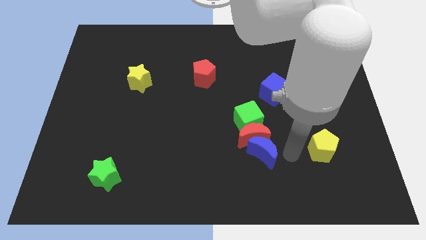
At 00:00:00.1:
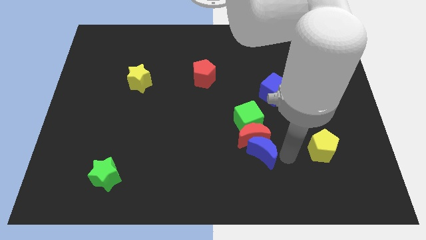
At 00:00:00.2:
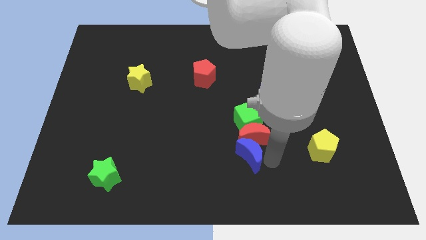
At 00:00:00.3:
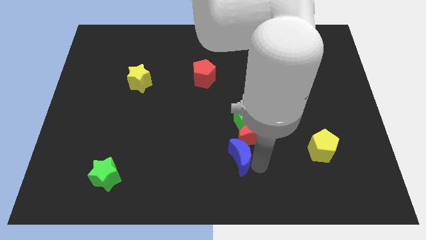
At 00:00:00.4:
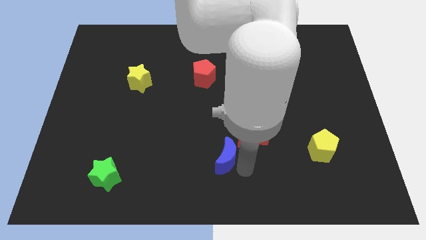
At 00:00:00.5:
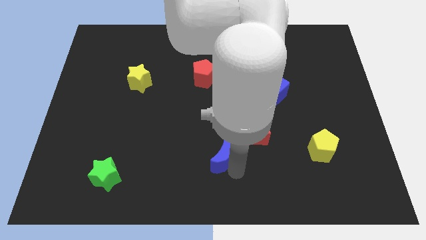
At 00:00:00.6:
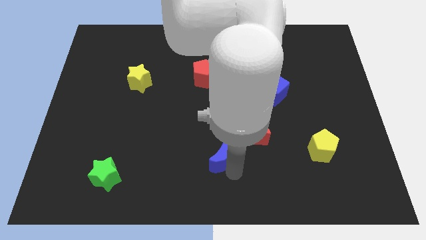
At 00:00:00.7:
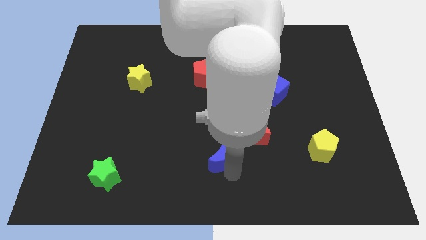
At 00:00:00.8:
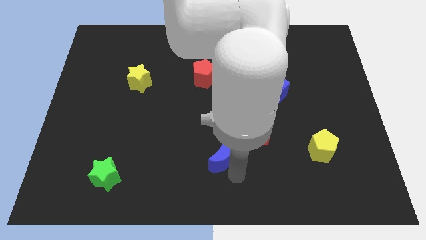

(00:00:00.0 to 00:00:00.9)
push blue crescent slightly to the left

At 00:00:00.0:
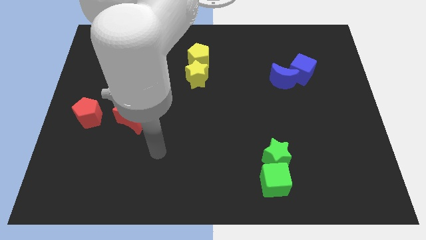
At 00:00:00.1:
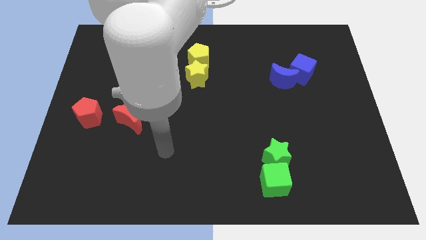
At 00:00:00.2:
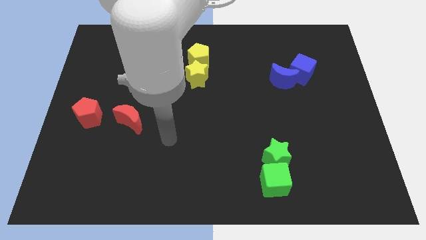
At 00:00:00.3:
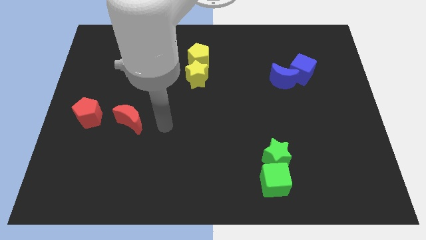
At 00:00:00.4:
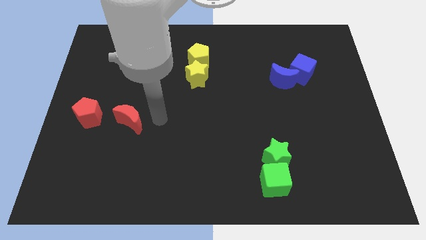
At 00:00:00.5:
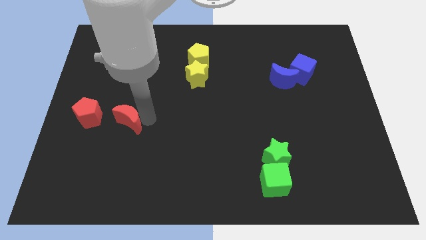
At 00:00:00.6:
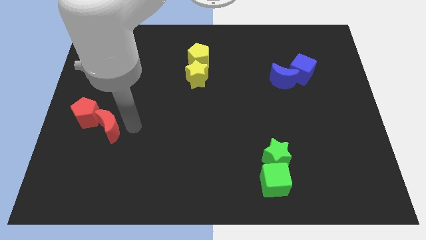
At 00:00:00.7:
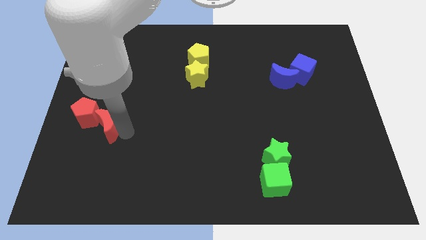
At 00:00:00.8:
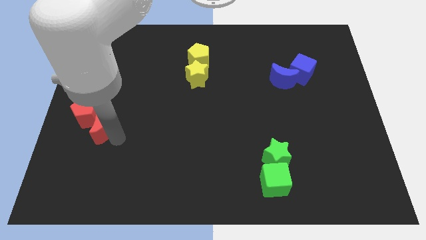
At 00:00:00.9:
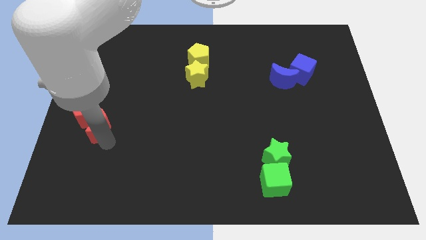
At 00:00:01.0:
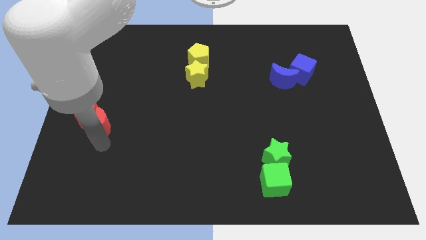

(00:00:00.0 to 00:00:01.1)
push red moon into the red pentagon

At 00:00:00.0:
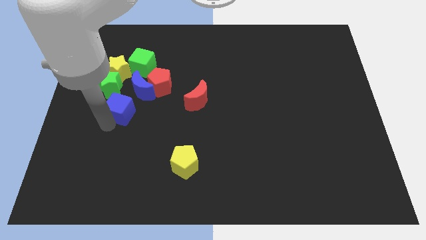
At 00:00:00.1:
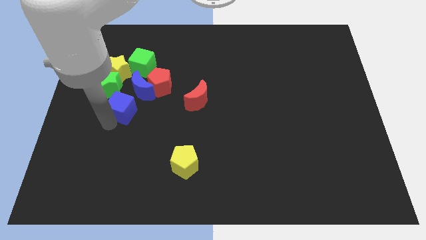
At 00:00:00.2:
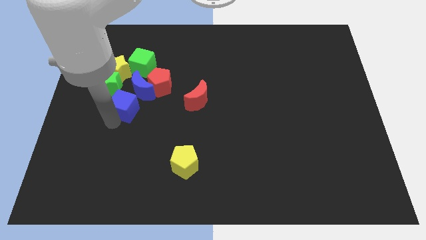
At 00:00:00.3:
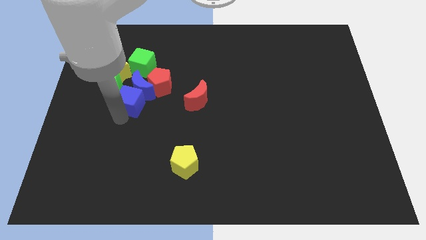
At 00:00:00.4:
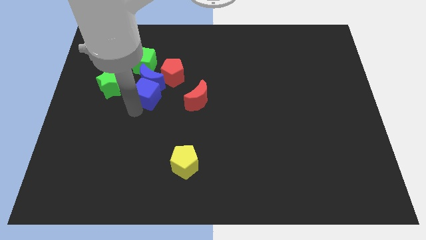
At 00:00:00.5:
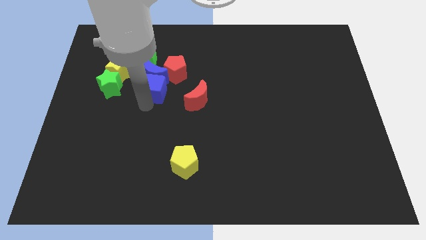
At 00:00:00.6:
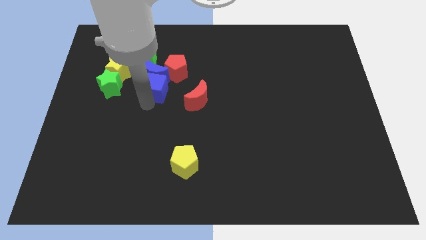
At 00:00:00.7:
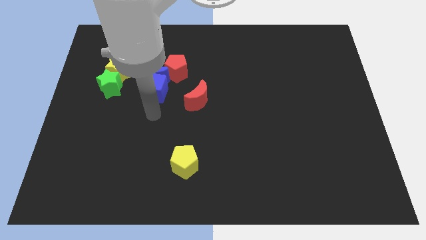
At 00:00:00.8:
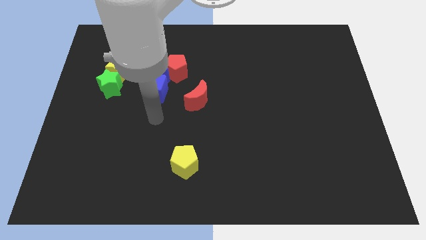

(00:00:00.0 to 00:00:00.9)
push blue cube into the blue moon

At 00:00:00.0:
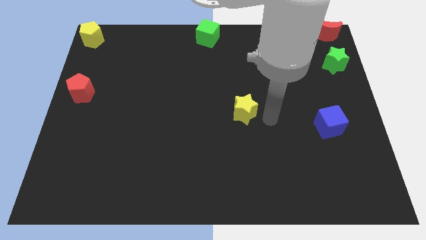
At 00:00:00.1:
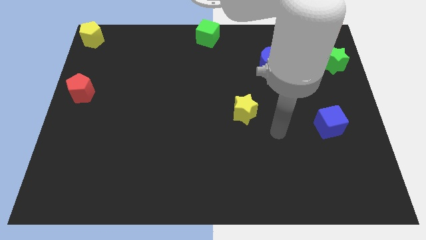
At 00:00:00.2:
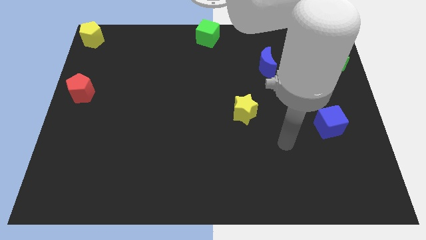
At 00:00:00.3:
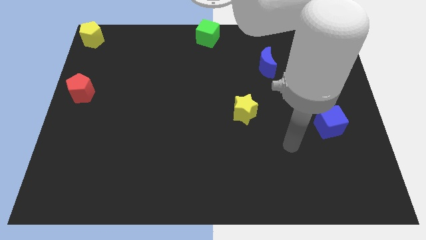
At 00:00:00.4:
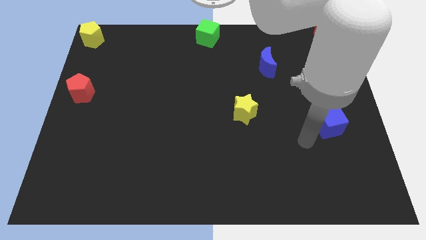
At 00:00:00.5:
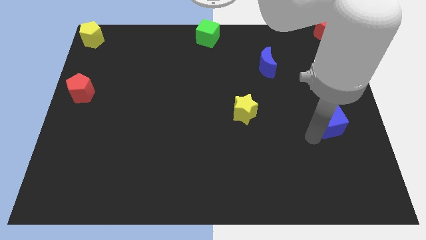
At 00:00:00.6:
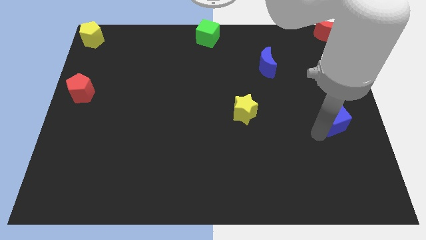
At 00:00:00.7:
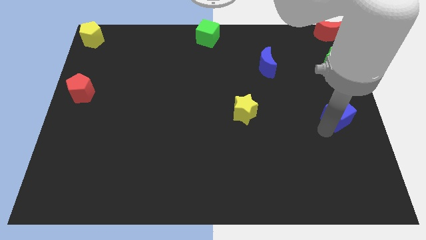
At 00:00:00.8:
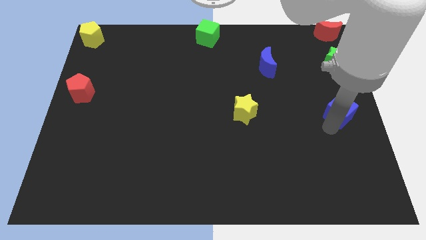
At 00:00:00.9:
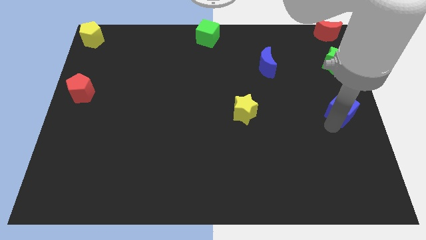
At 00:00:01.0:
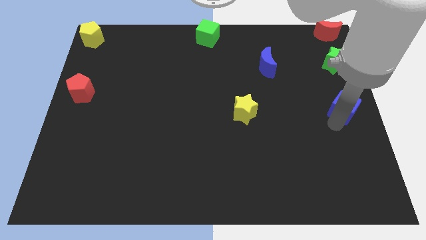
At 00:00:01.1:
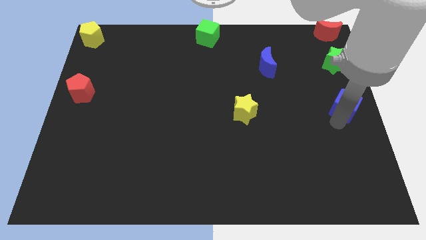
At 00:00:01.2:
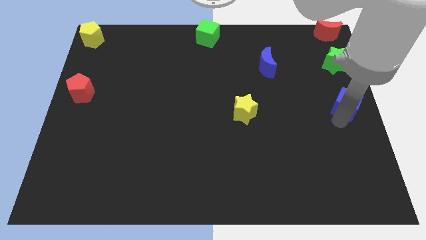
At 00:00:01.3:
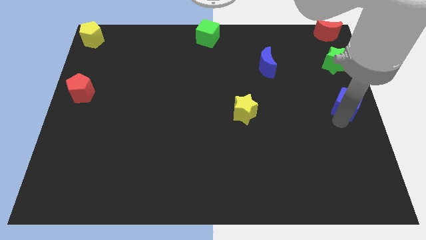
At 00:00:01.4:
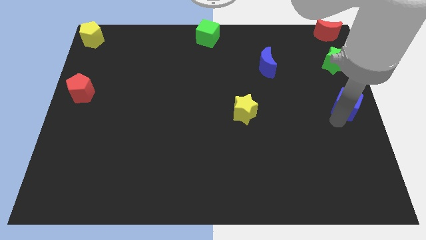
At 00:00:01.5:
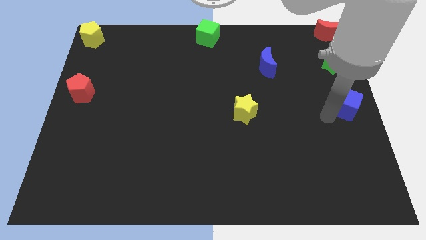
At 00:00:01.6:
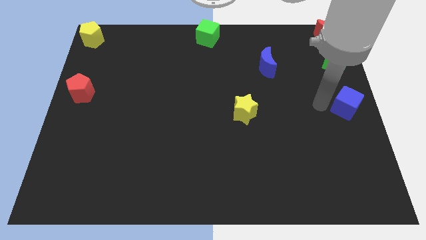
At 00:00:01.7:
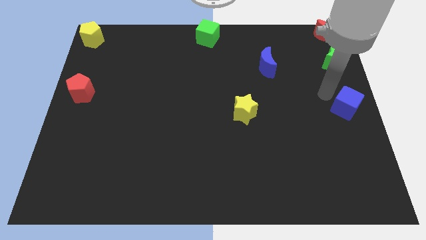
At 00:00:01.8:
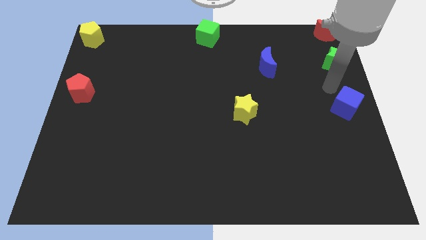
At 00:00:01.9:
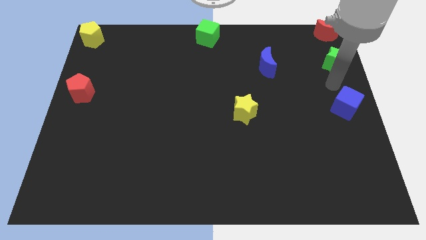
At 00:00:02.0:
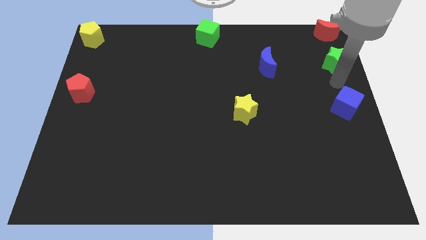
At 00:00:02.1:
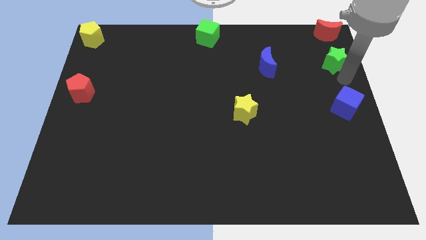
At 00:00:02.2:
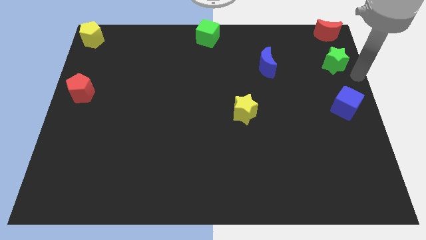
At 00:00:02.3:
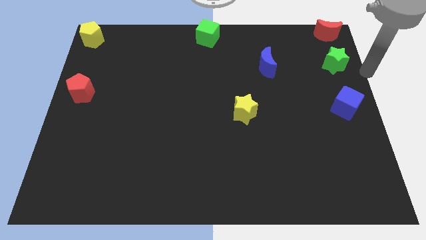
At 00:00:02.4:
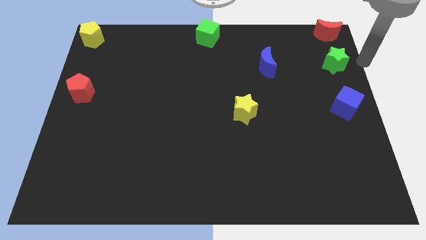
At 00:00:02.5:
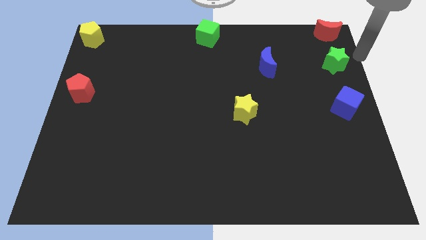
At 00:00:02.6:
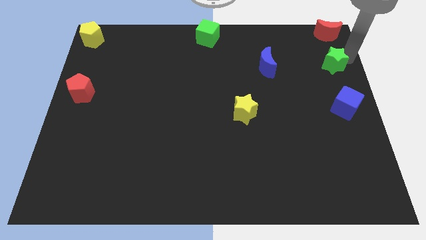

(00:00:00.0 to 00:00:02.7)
place the blue cube below the green star

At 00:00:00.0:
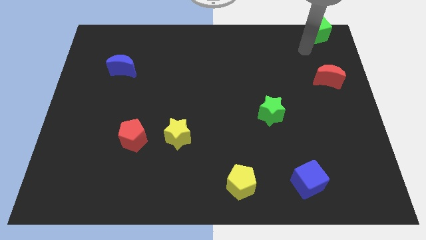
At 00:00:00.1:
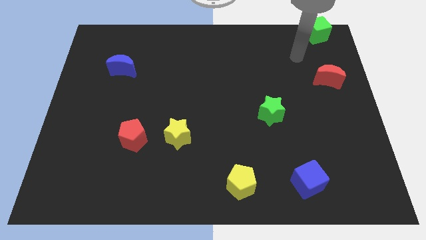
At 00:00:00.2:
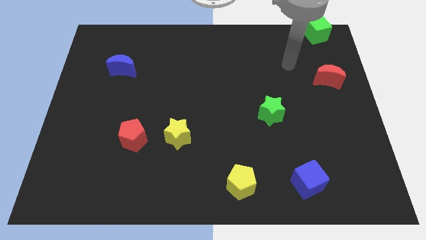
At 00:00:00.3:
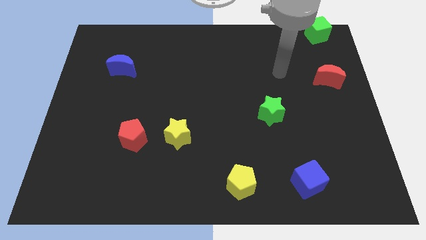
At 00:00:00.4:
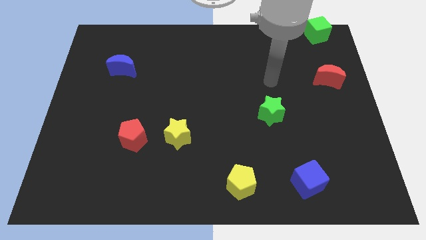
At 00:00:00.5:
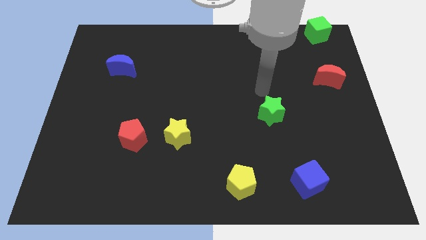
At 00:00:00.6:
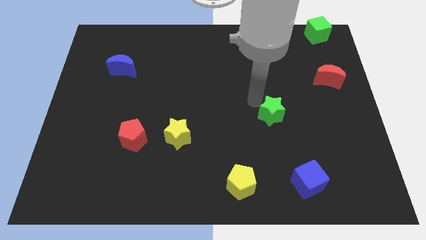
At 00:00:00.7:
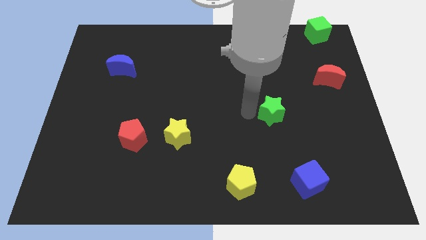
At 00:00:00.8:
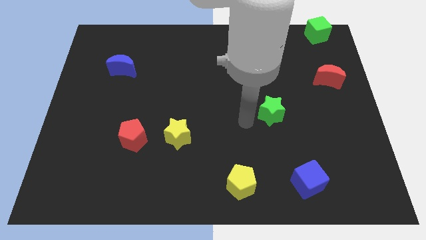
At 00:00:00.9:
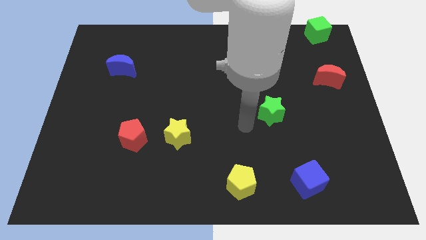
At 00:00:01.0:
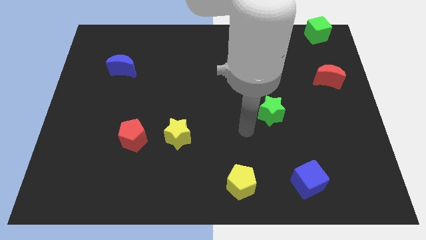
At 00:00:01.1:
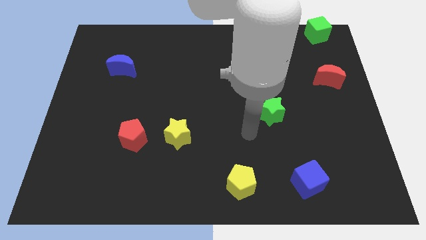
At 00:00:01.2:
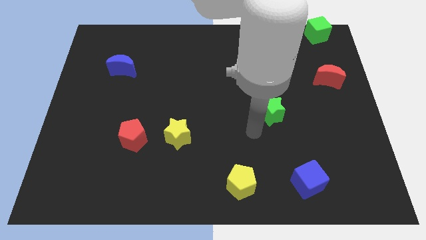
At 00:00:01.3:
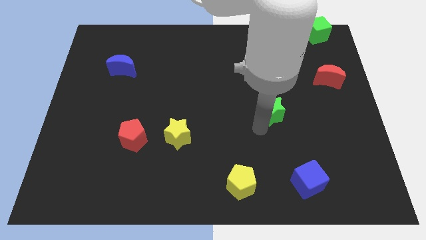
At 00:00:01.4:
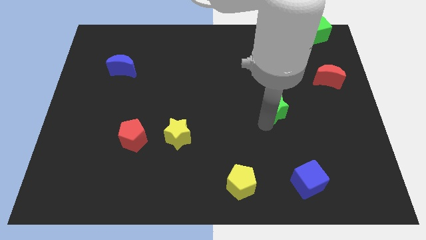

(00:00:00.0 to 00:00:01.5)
move the arm towards the green star

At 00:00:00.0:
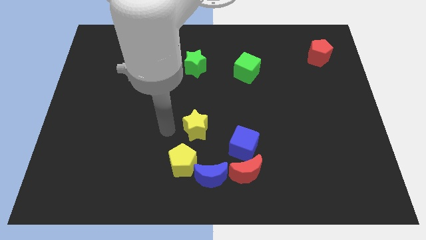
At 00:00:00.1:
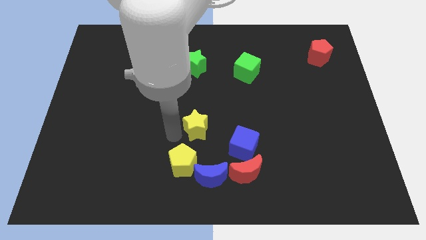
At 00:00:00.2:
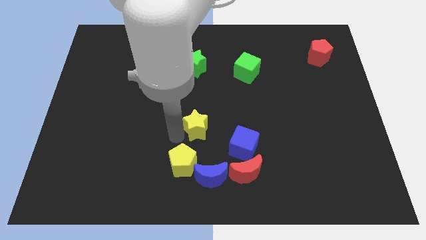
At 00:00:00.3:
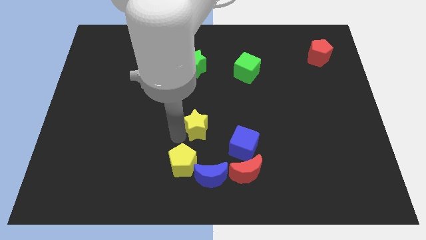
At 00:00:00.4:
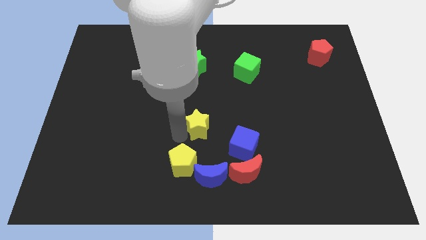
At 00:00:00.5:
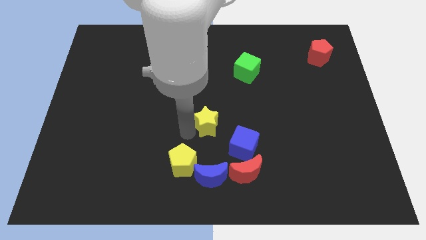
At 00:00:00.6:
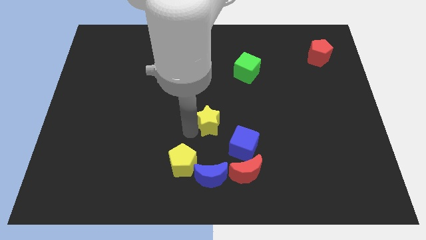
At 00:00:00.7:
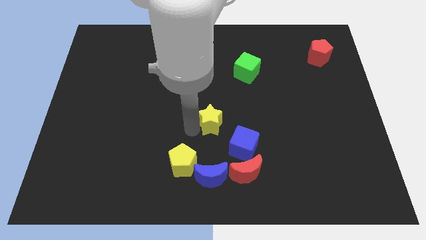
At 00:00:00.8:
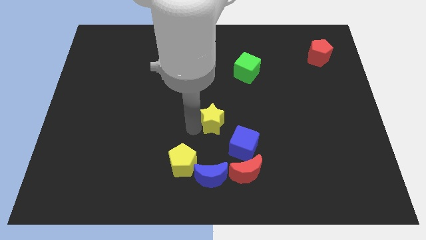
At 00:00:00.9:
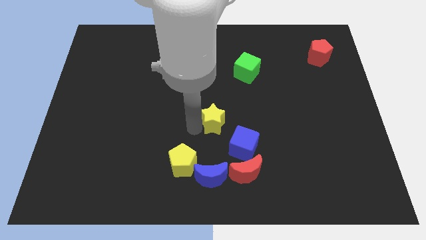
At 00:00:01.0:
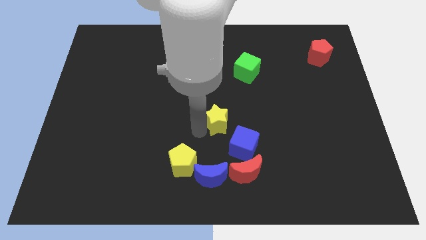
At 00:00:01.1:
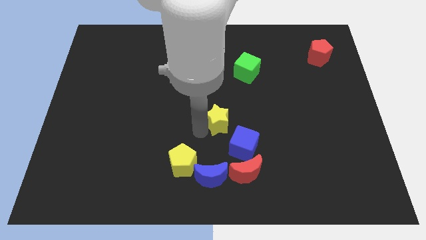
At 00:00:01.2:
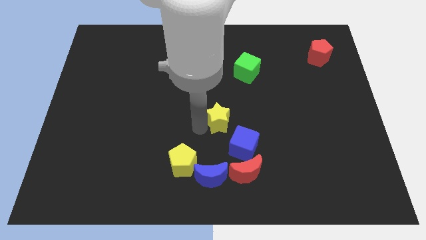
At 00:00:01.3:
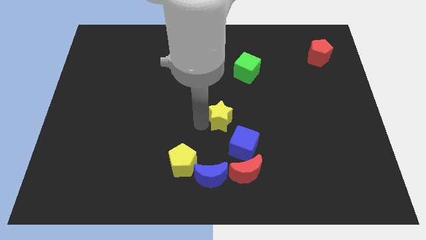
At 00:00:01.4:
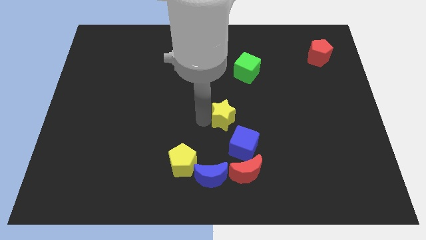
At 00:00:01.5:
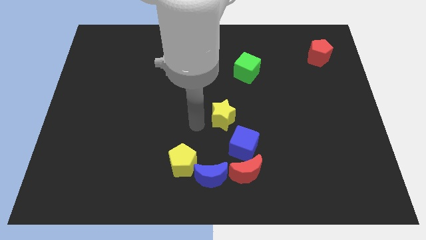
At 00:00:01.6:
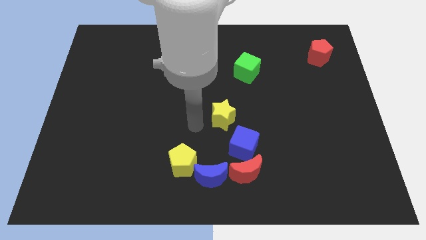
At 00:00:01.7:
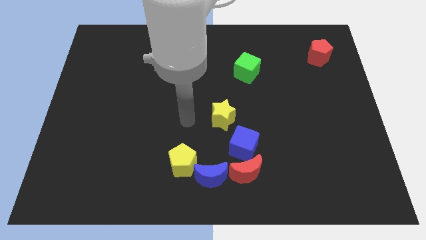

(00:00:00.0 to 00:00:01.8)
move the yellow star above the blue cube diagonally
